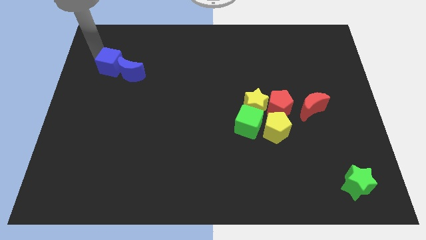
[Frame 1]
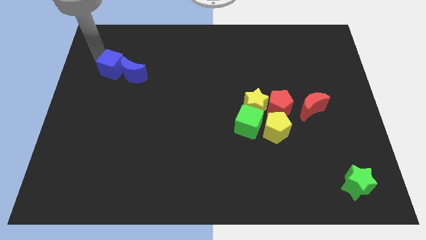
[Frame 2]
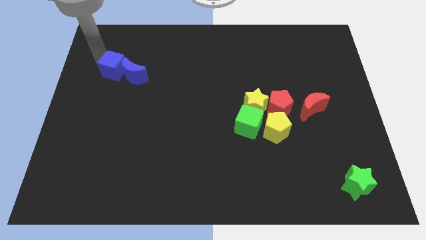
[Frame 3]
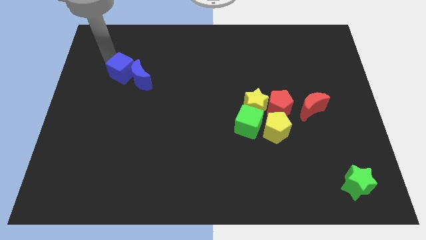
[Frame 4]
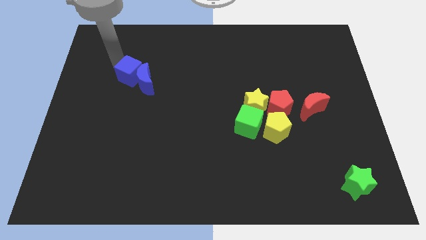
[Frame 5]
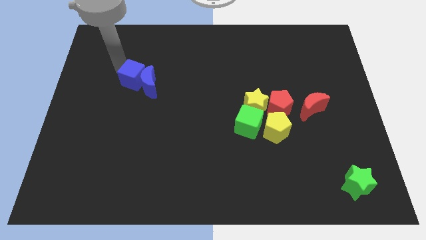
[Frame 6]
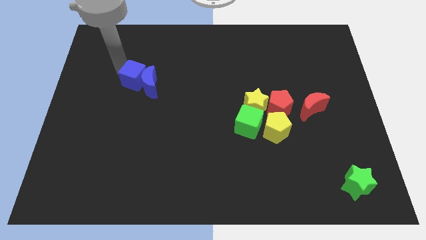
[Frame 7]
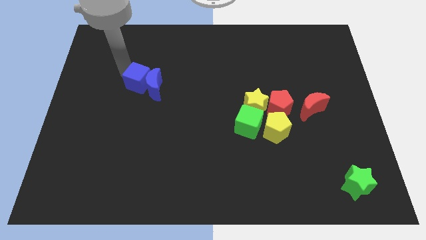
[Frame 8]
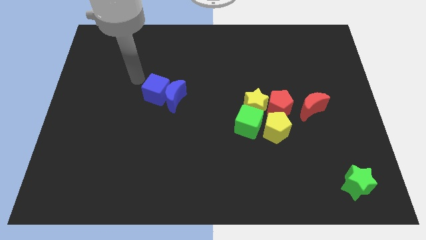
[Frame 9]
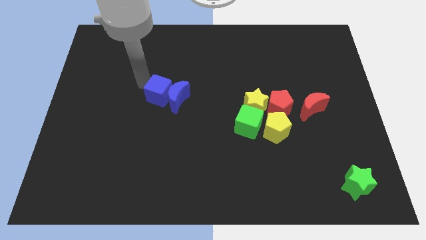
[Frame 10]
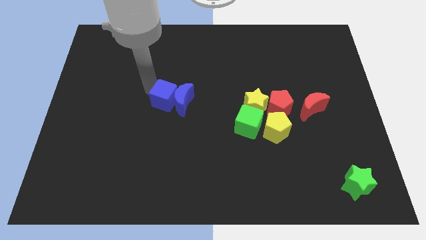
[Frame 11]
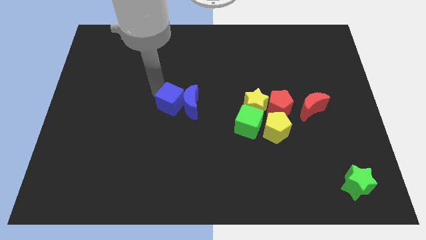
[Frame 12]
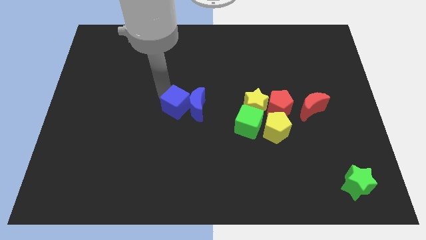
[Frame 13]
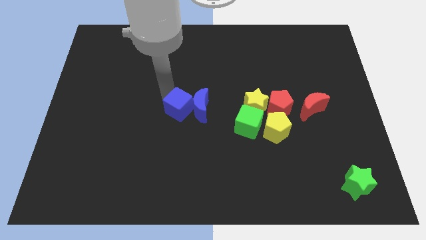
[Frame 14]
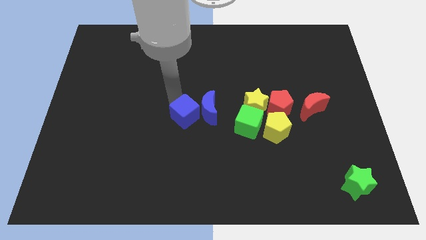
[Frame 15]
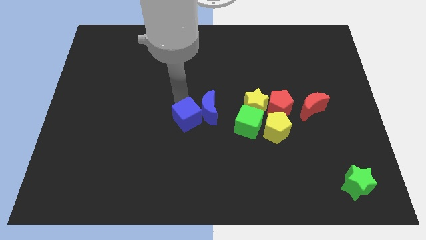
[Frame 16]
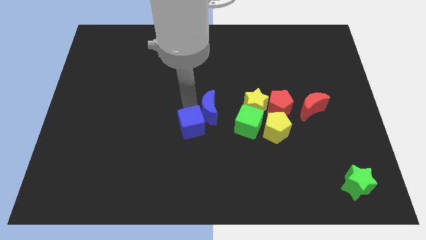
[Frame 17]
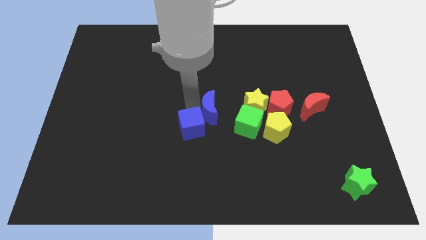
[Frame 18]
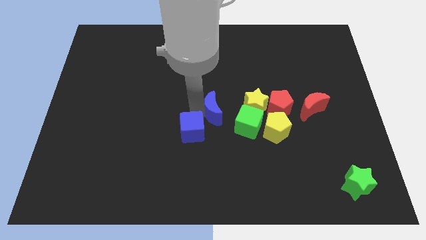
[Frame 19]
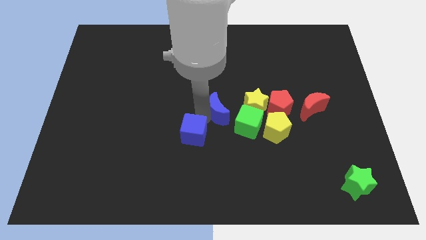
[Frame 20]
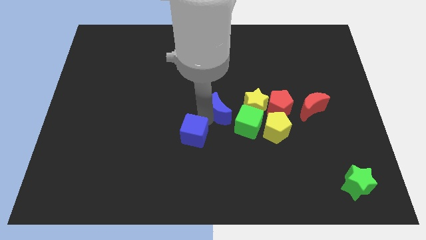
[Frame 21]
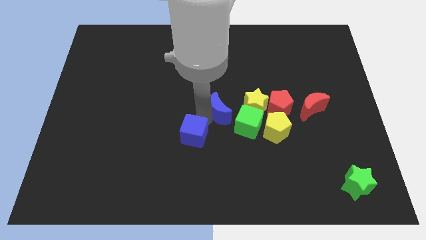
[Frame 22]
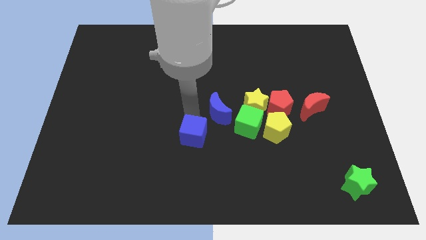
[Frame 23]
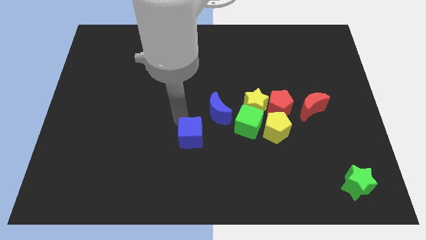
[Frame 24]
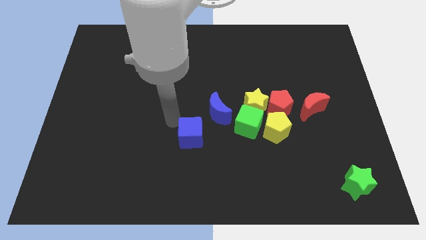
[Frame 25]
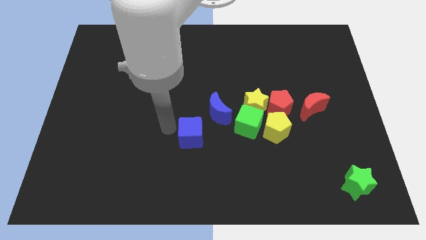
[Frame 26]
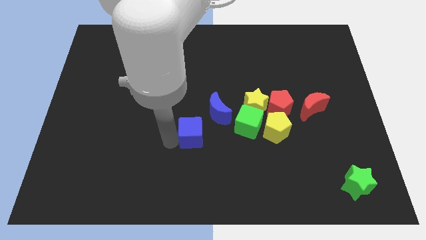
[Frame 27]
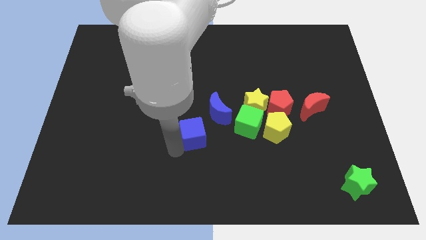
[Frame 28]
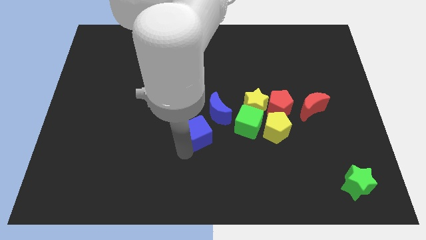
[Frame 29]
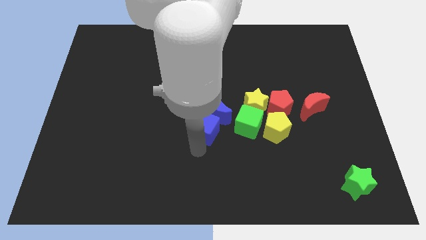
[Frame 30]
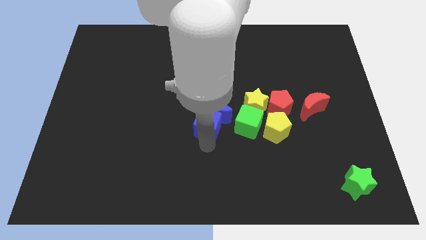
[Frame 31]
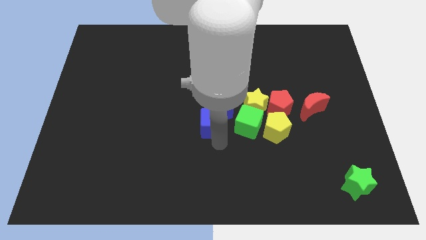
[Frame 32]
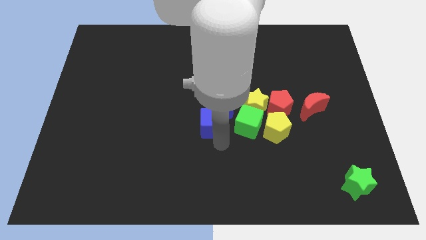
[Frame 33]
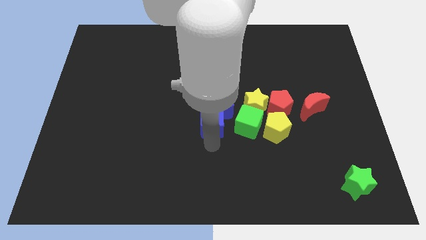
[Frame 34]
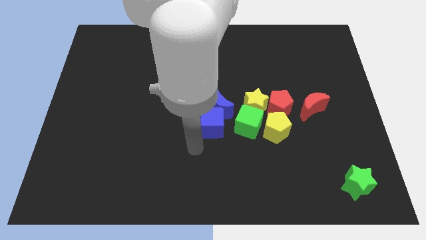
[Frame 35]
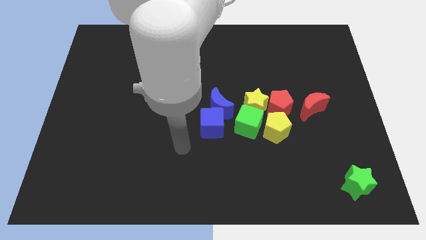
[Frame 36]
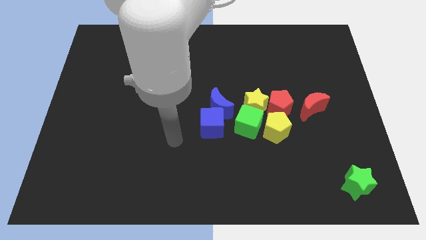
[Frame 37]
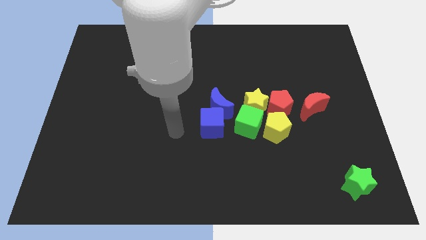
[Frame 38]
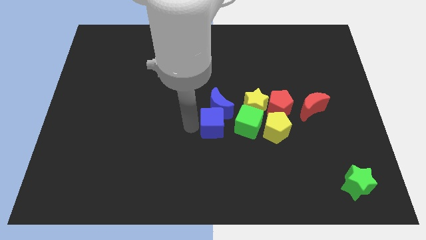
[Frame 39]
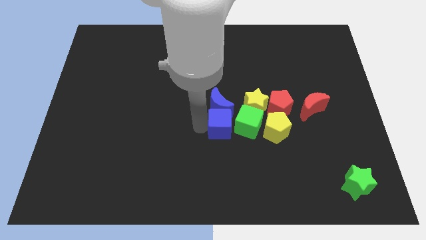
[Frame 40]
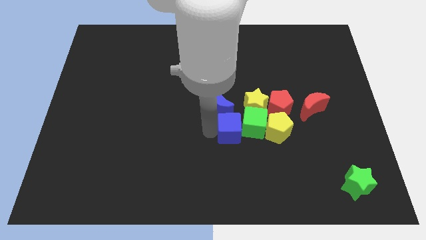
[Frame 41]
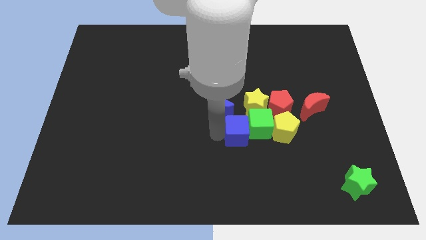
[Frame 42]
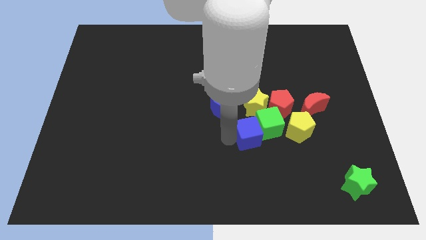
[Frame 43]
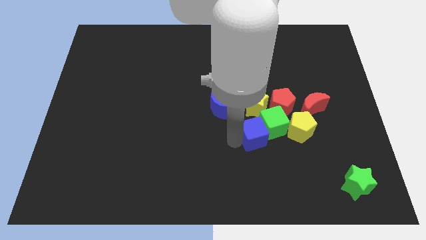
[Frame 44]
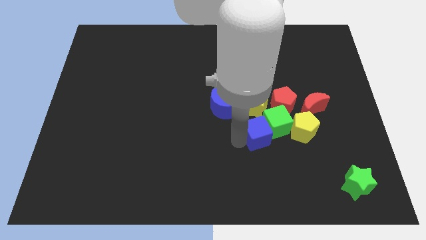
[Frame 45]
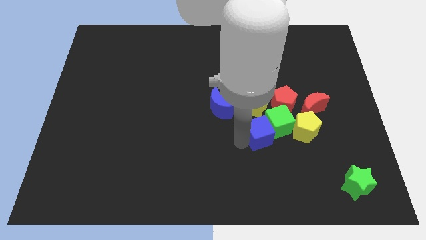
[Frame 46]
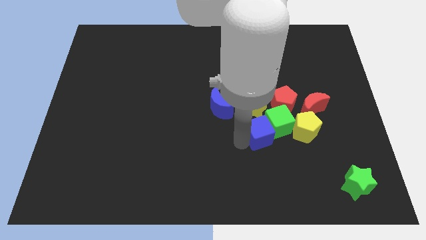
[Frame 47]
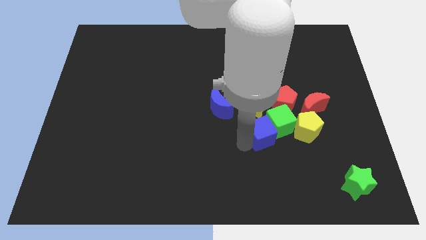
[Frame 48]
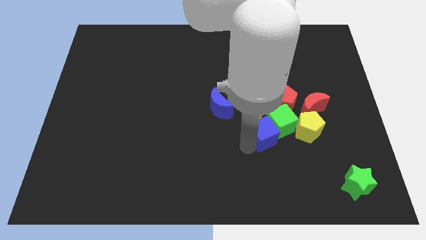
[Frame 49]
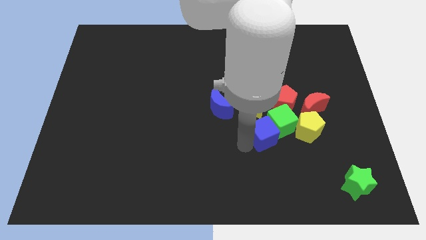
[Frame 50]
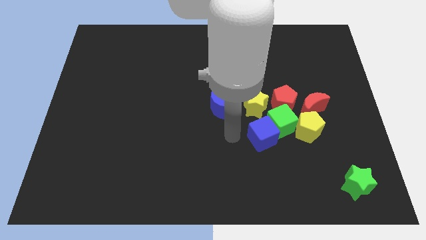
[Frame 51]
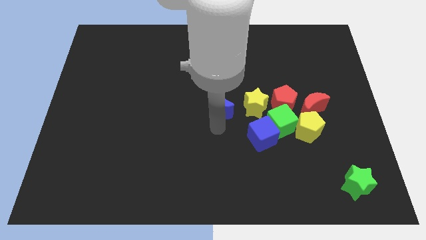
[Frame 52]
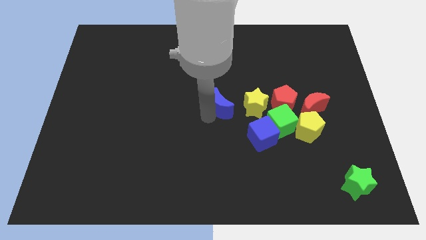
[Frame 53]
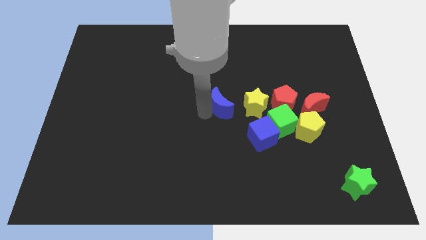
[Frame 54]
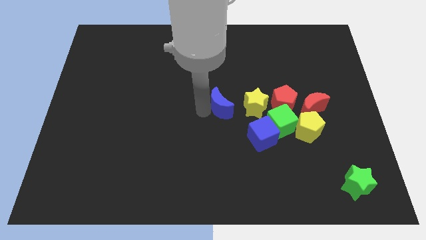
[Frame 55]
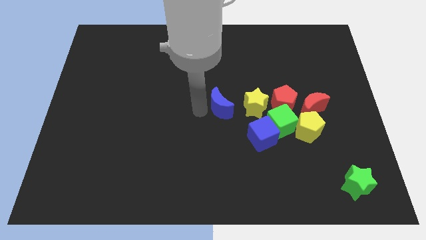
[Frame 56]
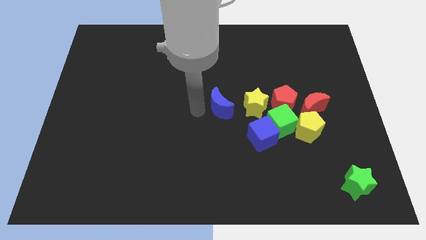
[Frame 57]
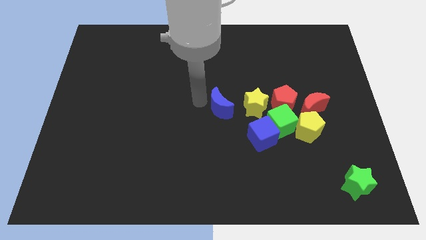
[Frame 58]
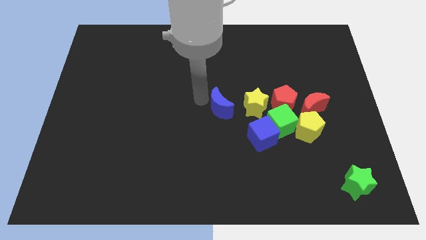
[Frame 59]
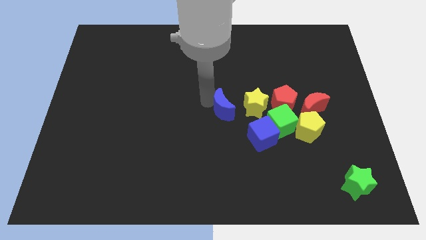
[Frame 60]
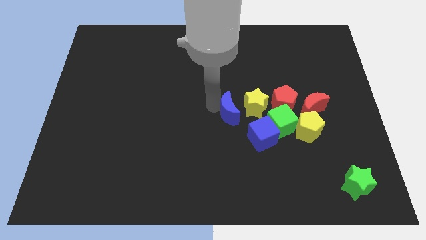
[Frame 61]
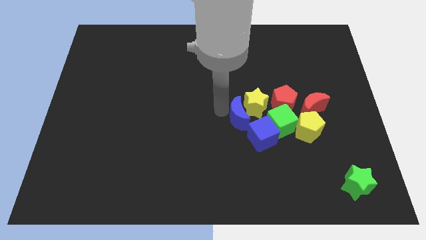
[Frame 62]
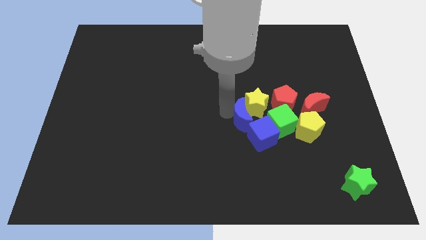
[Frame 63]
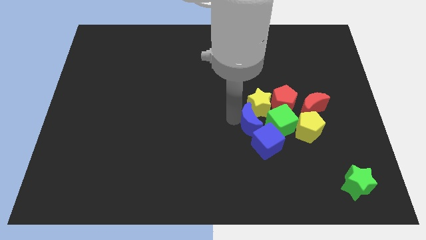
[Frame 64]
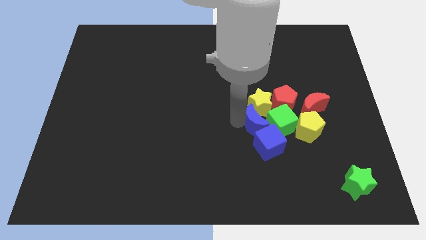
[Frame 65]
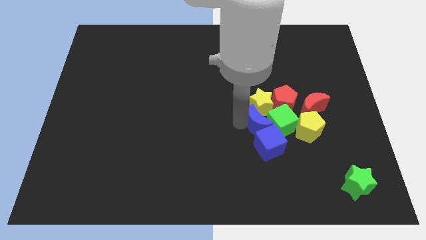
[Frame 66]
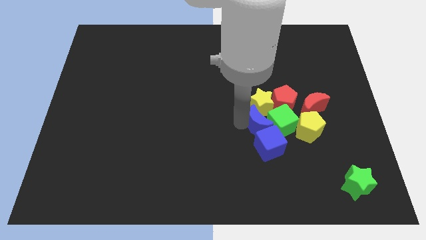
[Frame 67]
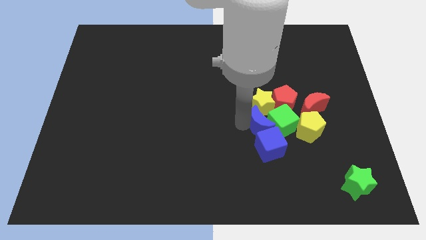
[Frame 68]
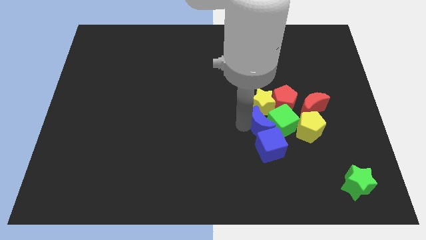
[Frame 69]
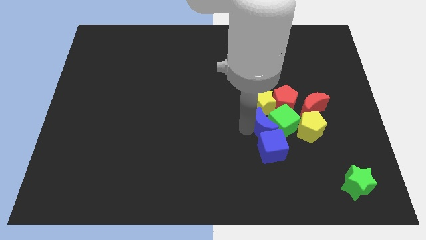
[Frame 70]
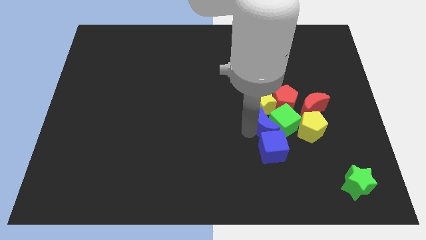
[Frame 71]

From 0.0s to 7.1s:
move the blue crescent to the top of blue cube

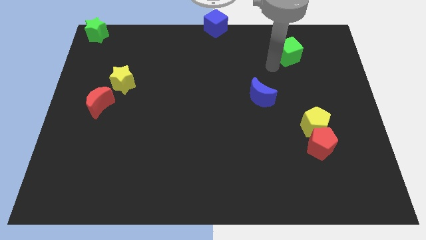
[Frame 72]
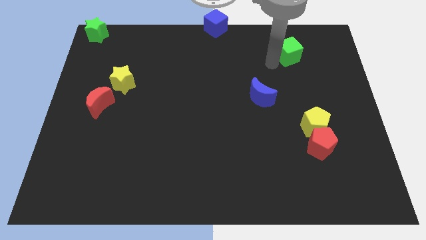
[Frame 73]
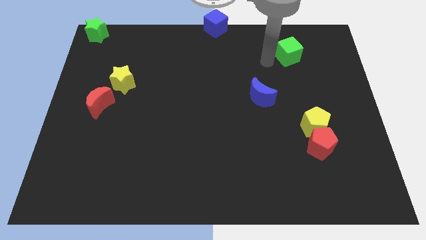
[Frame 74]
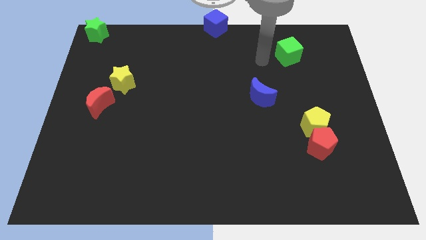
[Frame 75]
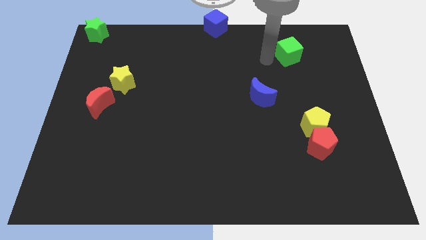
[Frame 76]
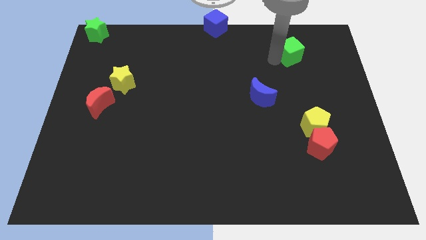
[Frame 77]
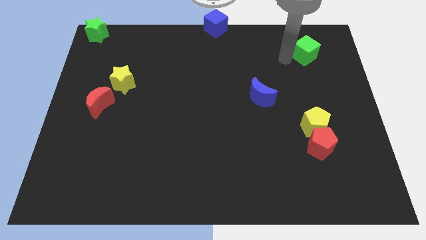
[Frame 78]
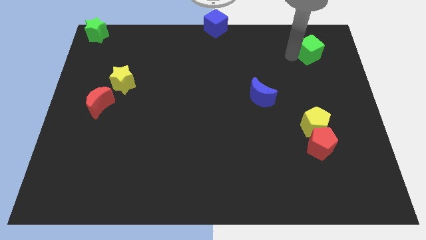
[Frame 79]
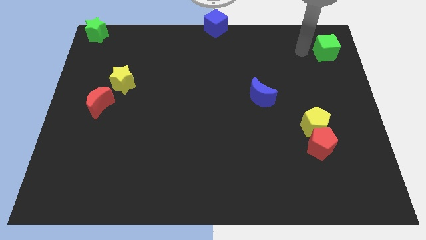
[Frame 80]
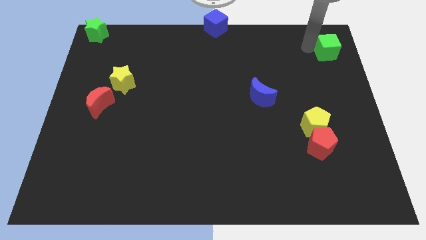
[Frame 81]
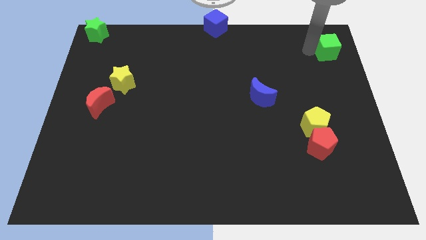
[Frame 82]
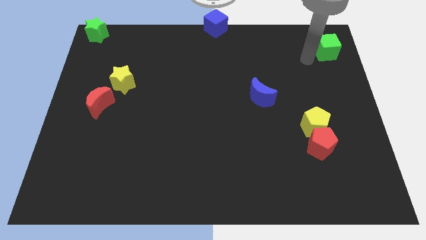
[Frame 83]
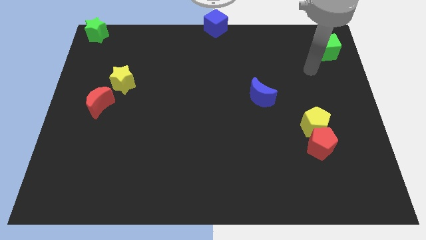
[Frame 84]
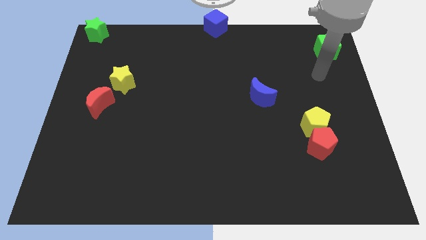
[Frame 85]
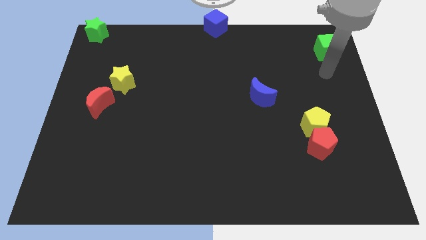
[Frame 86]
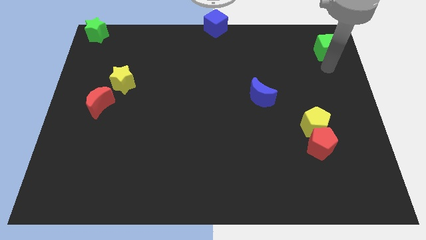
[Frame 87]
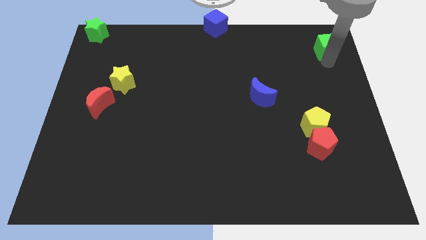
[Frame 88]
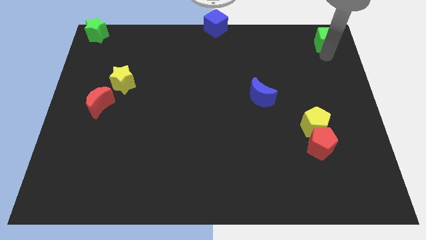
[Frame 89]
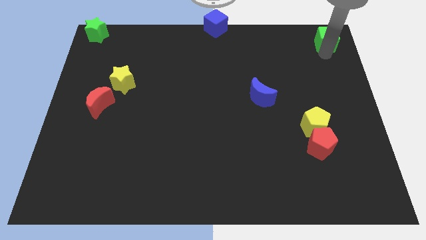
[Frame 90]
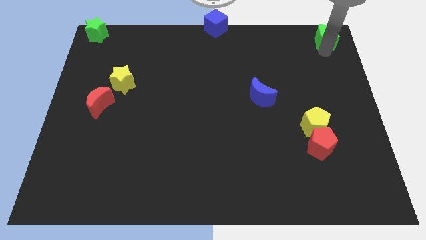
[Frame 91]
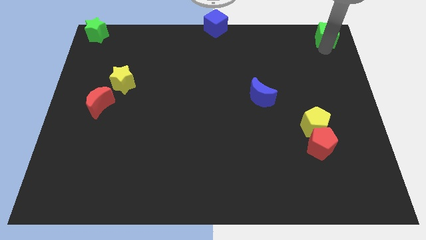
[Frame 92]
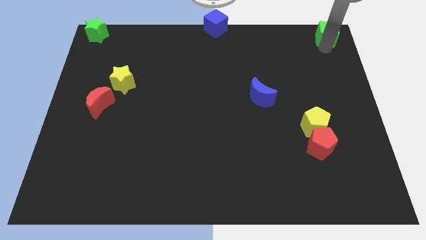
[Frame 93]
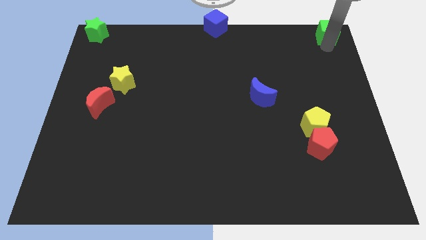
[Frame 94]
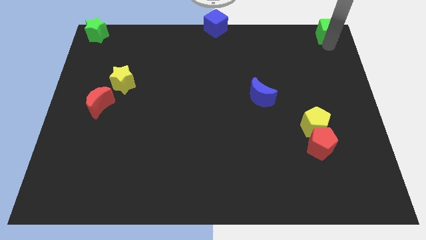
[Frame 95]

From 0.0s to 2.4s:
place the green cube at the top right corner
